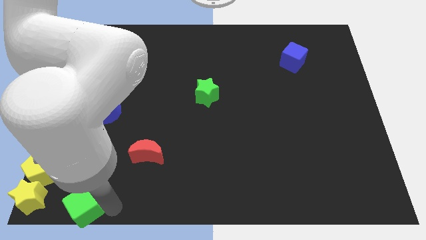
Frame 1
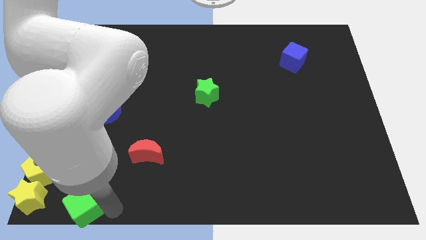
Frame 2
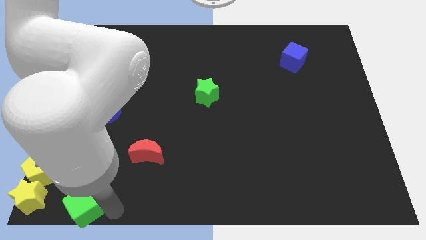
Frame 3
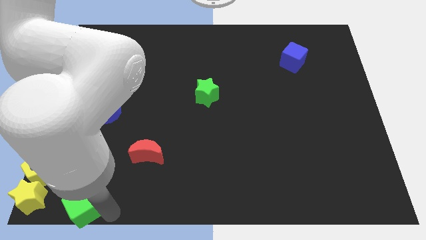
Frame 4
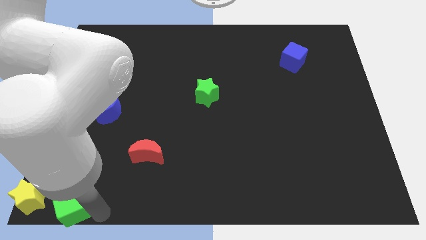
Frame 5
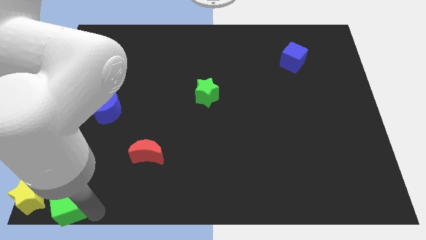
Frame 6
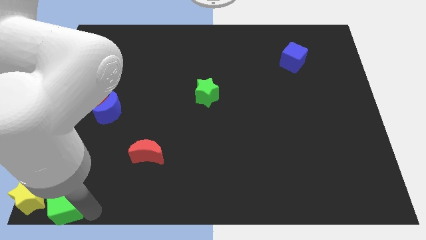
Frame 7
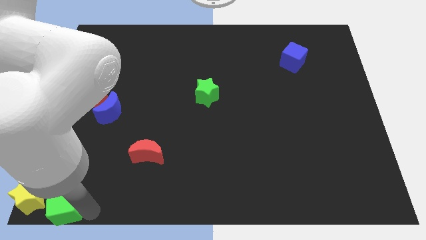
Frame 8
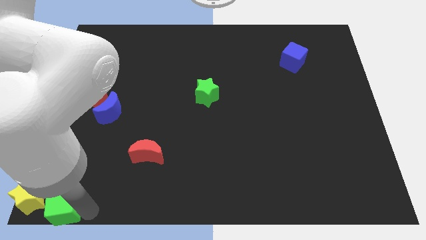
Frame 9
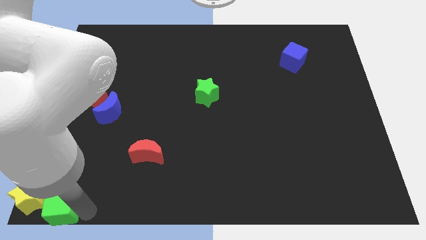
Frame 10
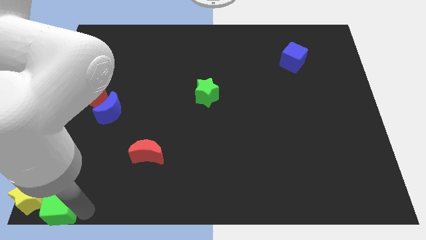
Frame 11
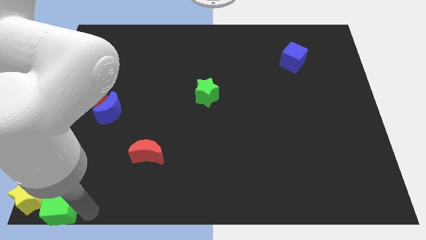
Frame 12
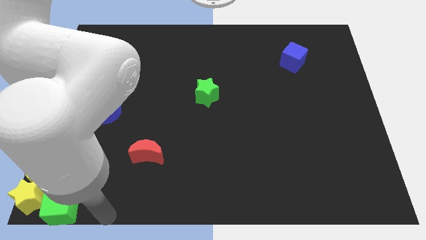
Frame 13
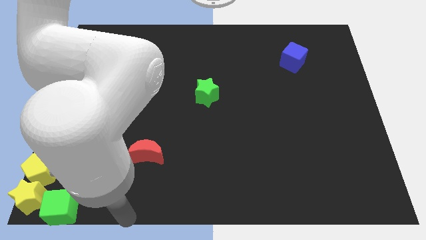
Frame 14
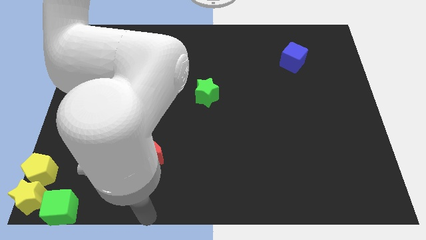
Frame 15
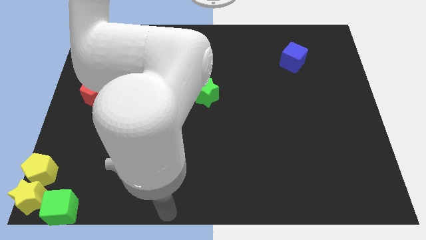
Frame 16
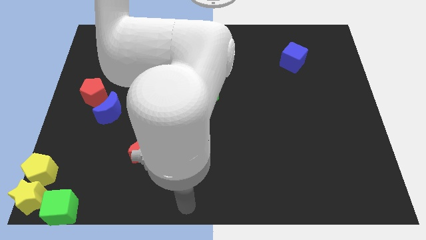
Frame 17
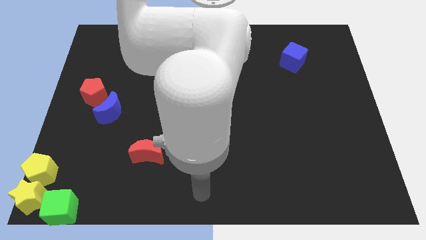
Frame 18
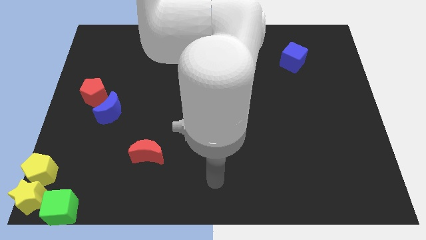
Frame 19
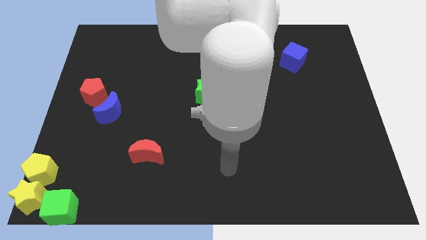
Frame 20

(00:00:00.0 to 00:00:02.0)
push the green cube into the yellow star

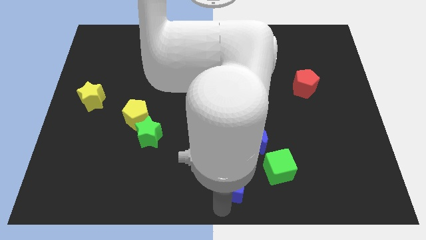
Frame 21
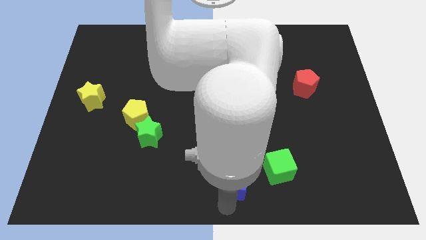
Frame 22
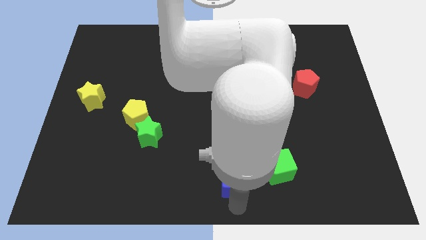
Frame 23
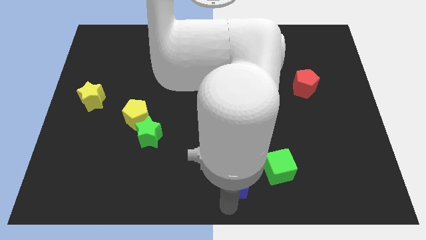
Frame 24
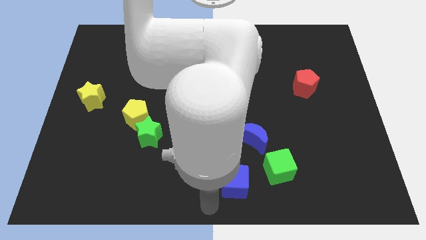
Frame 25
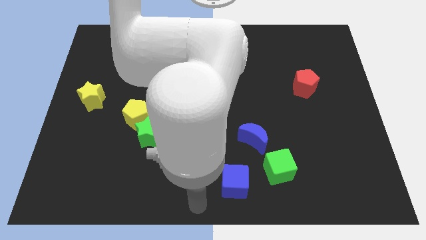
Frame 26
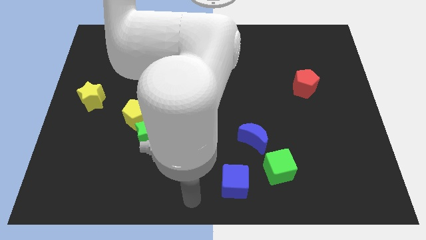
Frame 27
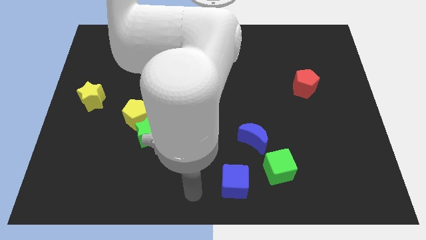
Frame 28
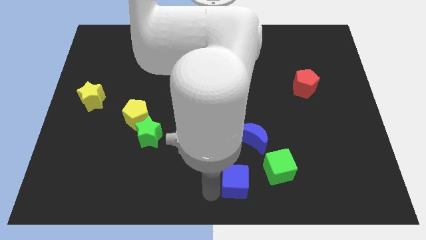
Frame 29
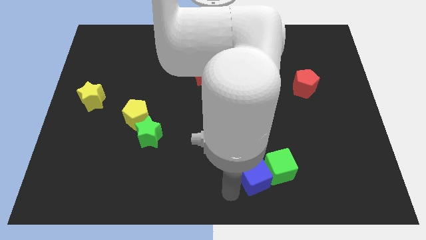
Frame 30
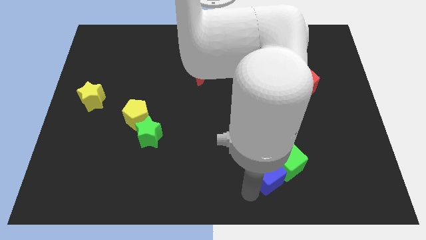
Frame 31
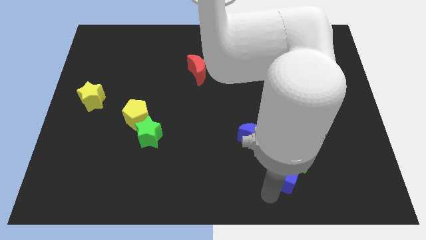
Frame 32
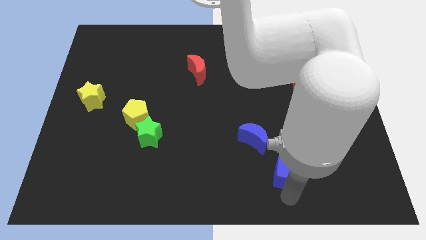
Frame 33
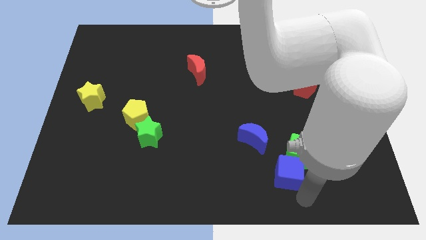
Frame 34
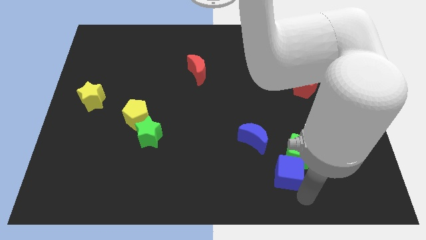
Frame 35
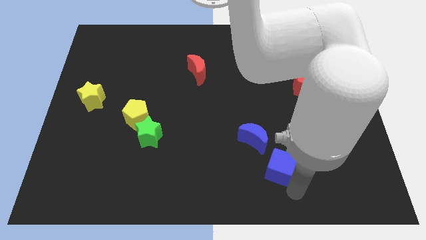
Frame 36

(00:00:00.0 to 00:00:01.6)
push the blue cube into the green cube

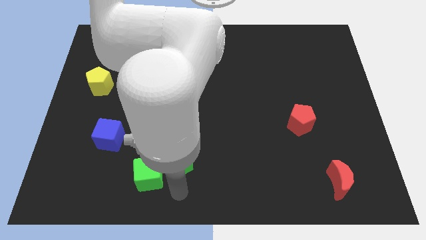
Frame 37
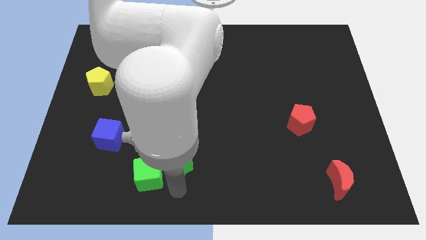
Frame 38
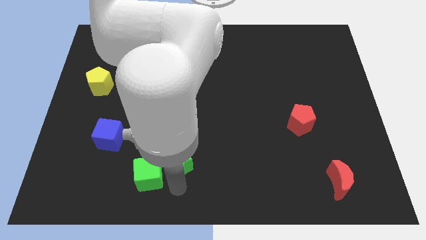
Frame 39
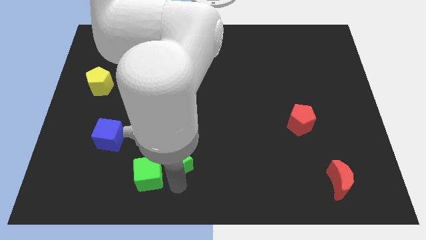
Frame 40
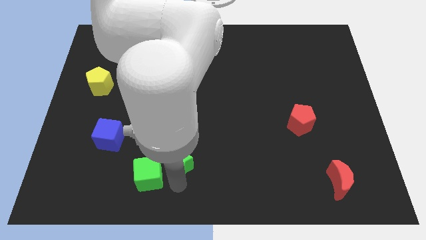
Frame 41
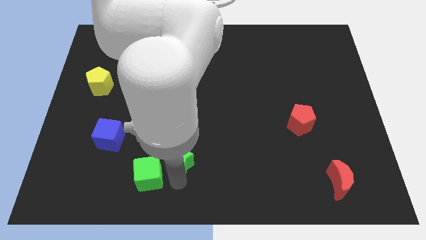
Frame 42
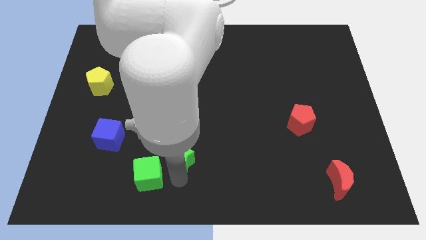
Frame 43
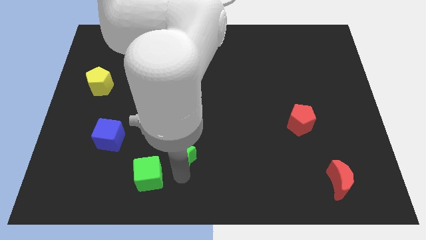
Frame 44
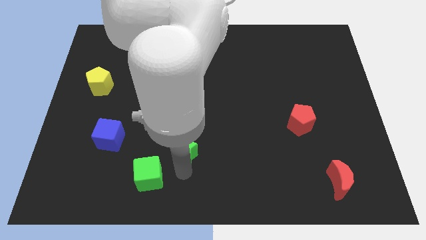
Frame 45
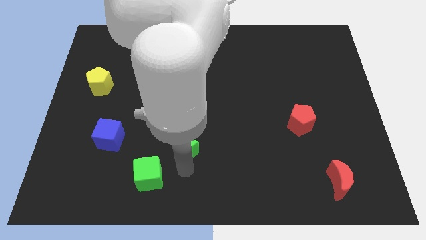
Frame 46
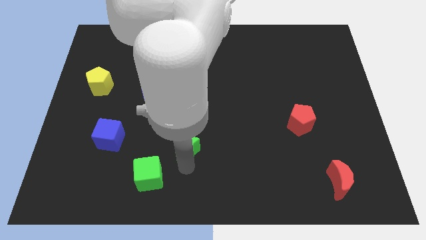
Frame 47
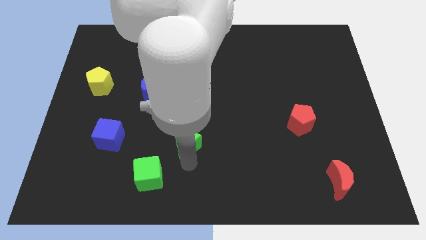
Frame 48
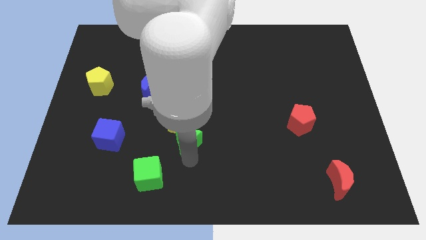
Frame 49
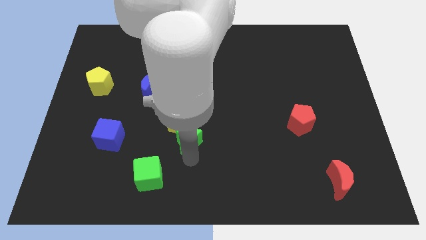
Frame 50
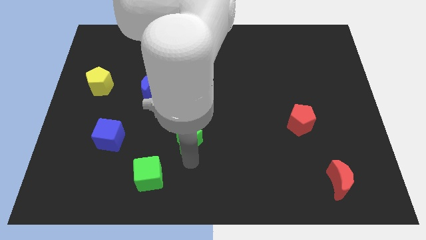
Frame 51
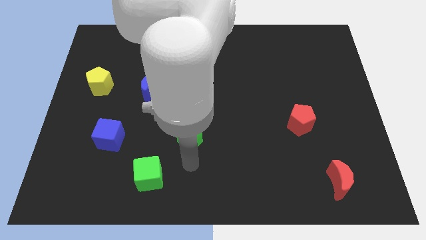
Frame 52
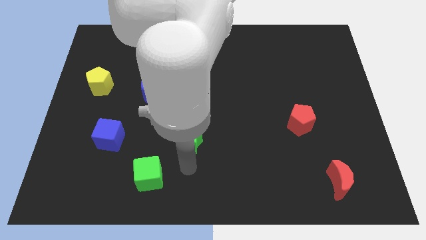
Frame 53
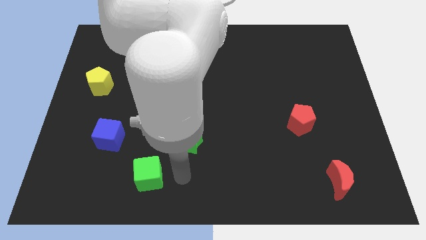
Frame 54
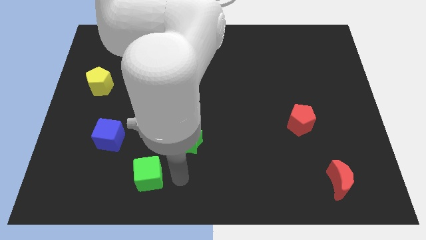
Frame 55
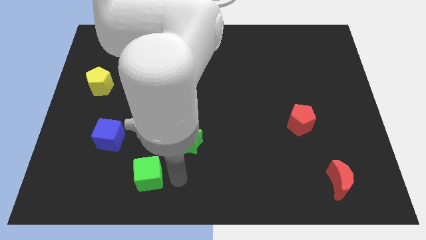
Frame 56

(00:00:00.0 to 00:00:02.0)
push the yellow star with the green star

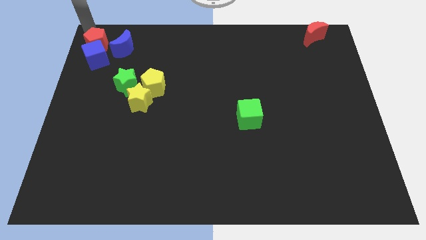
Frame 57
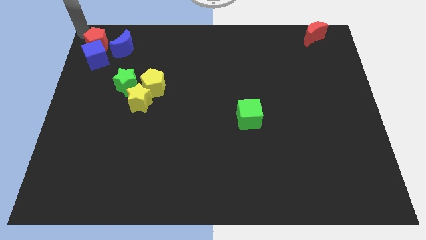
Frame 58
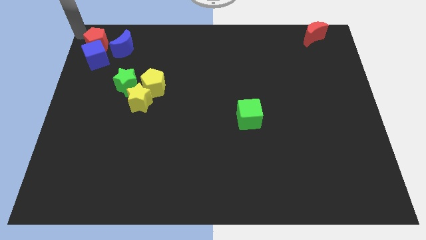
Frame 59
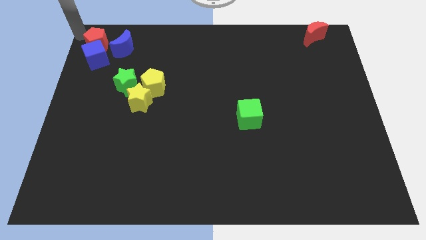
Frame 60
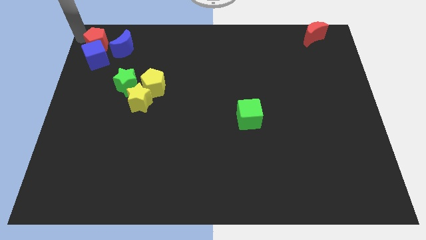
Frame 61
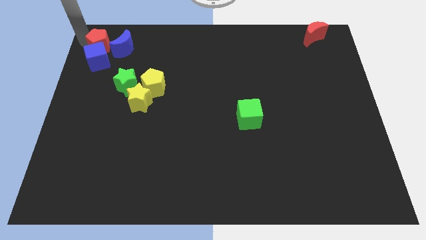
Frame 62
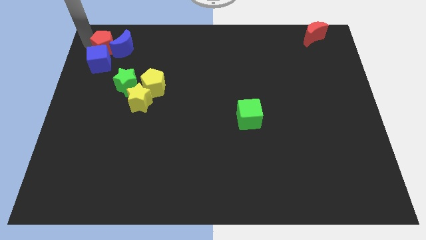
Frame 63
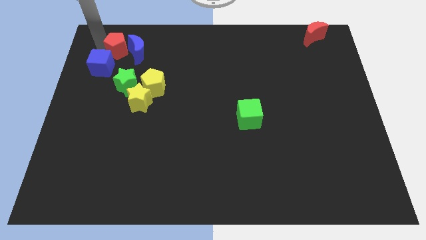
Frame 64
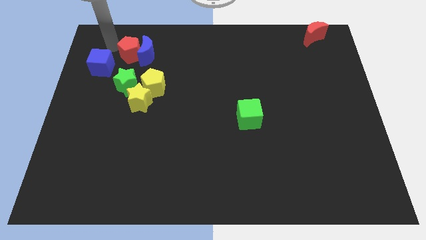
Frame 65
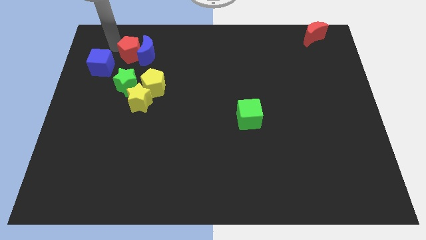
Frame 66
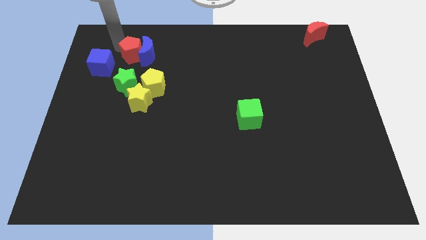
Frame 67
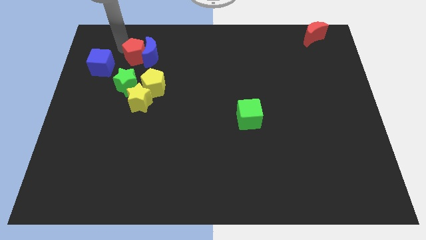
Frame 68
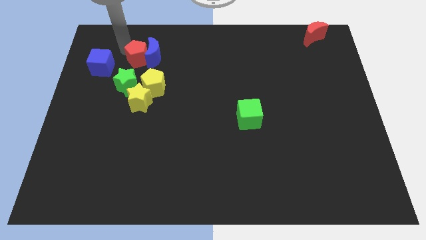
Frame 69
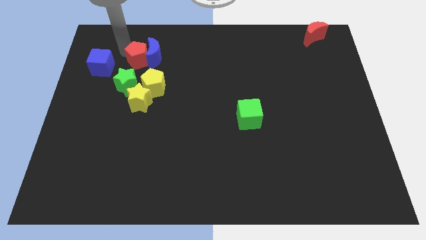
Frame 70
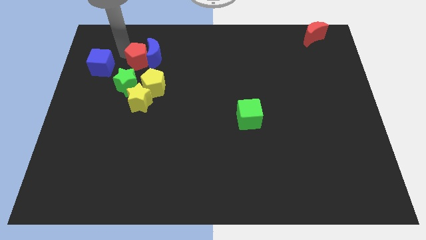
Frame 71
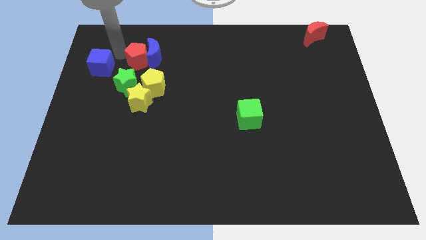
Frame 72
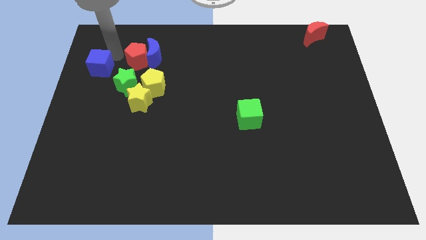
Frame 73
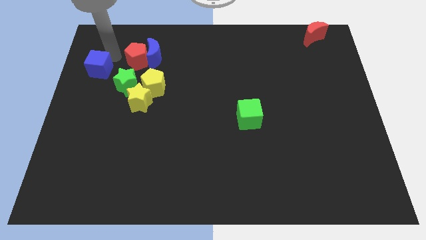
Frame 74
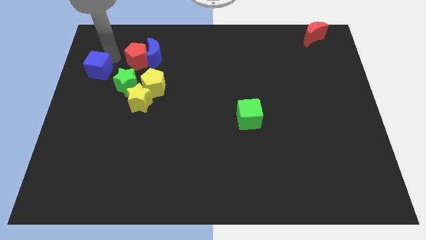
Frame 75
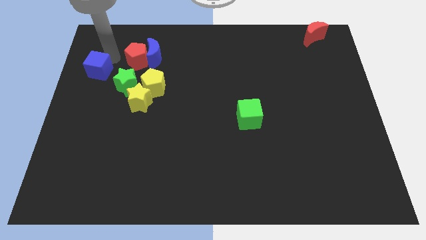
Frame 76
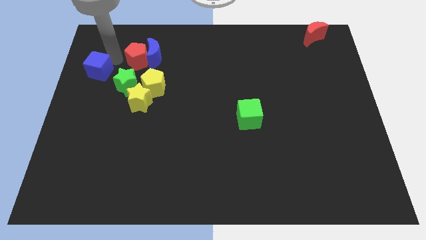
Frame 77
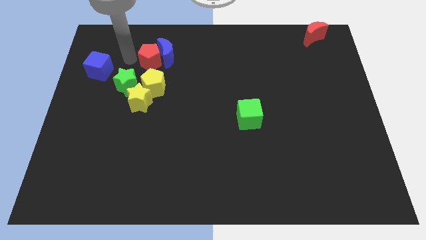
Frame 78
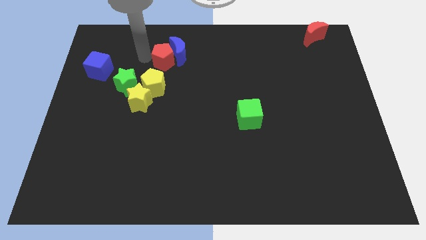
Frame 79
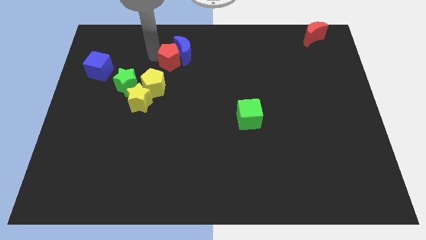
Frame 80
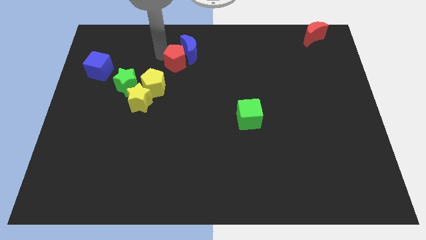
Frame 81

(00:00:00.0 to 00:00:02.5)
move the red pentagon and the blue moon at a time towards down

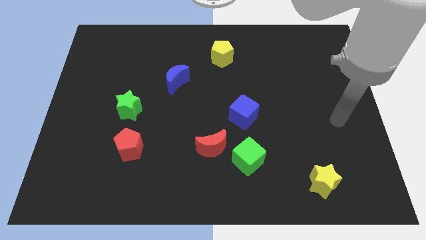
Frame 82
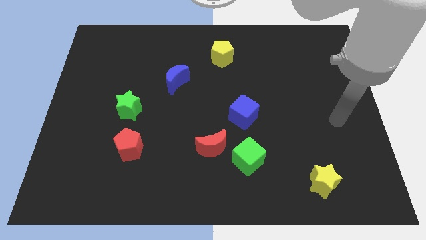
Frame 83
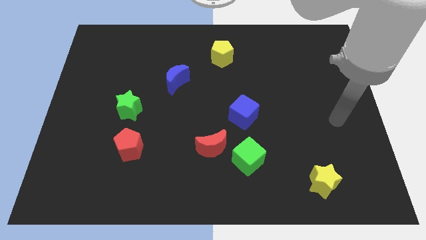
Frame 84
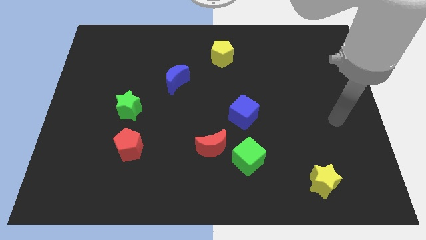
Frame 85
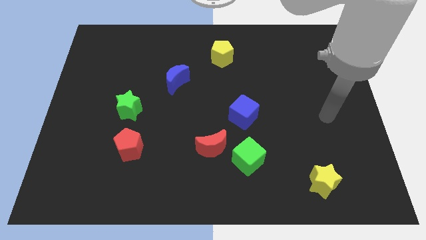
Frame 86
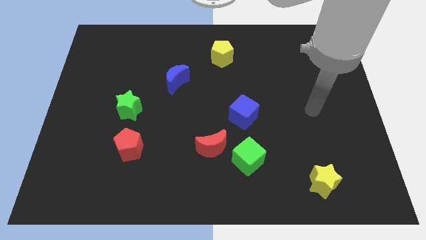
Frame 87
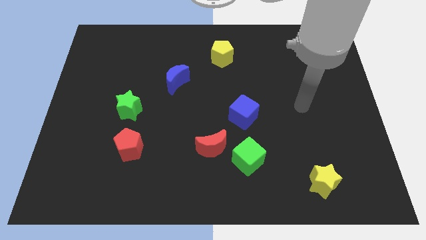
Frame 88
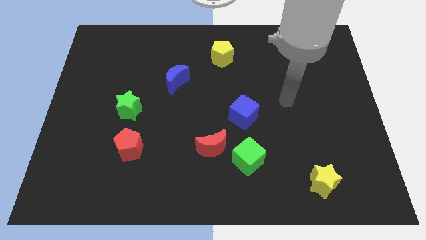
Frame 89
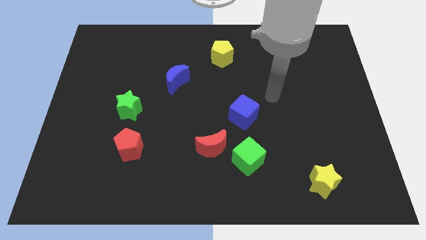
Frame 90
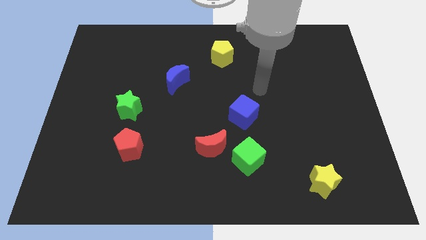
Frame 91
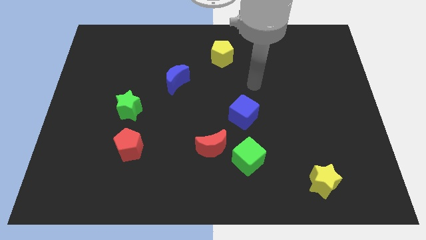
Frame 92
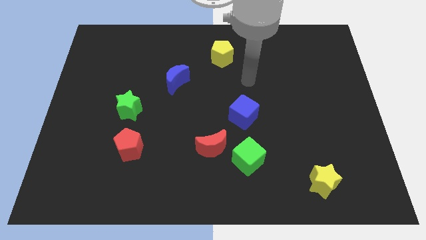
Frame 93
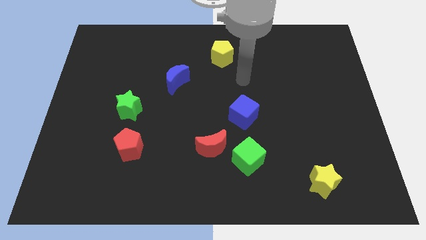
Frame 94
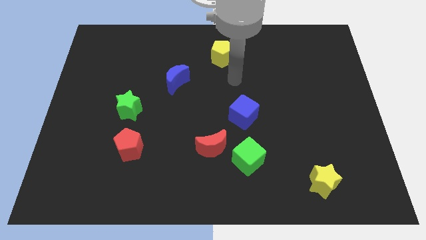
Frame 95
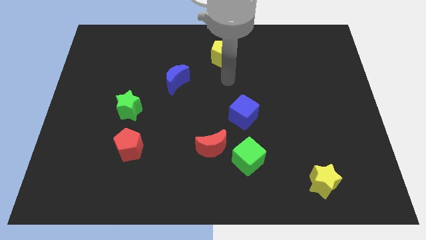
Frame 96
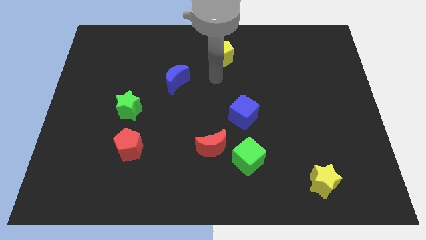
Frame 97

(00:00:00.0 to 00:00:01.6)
point your arm below the yellow pentagon
